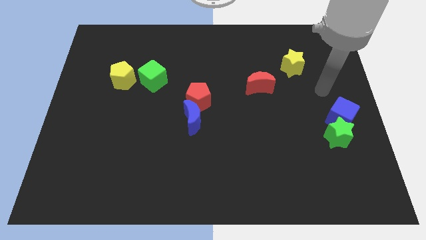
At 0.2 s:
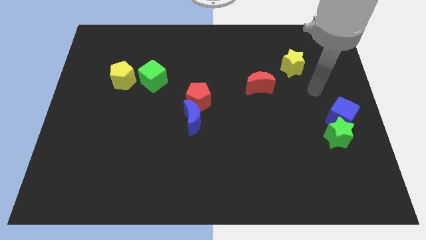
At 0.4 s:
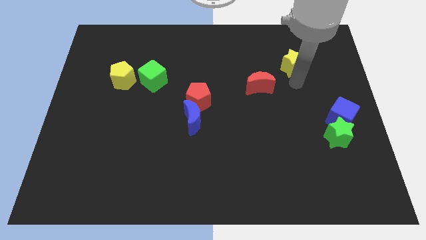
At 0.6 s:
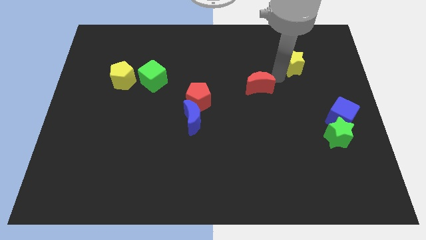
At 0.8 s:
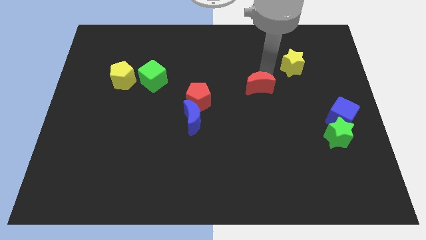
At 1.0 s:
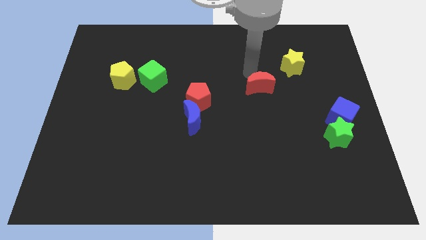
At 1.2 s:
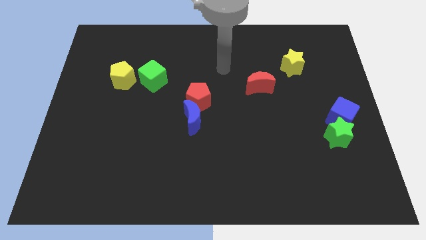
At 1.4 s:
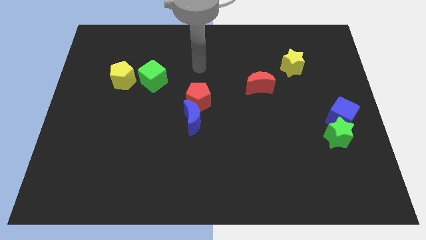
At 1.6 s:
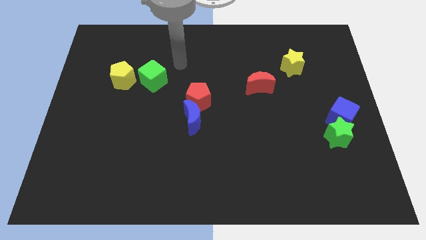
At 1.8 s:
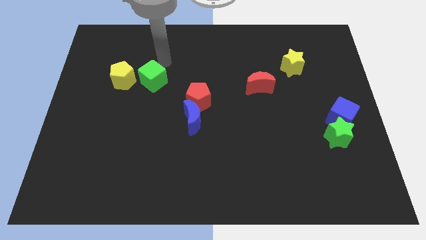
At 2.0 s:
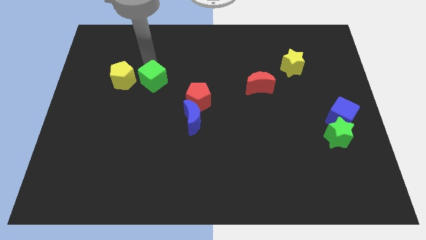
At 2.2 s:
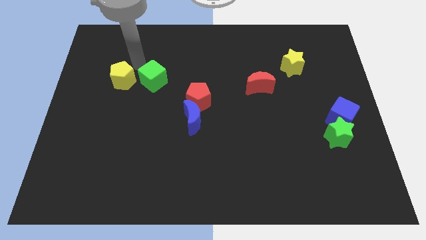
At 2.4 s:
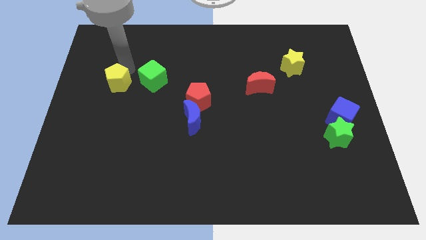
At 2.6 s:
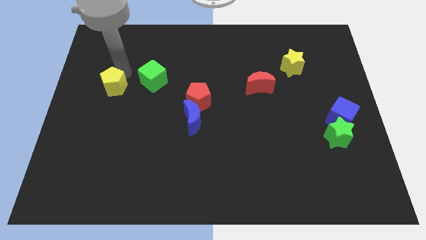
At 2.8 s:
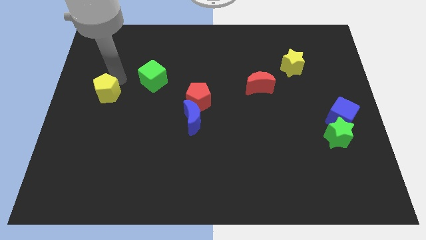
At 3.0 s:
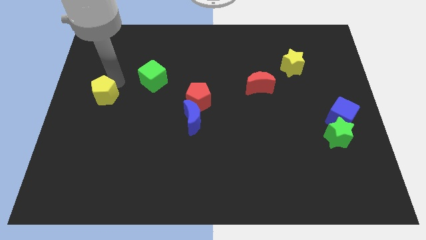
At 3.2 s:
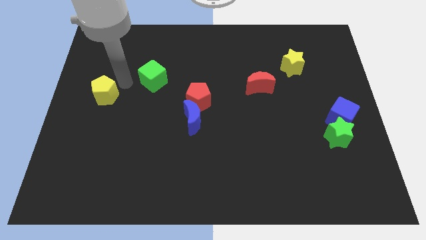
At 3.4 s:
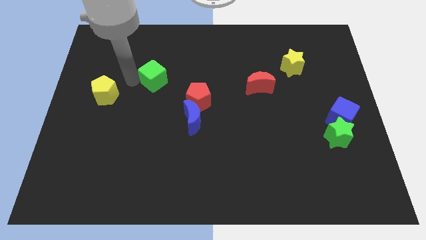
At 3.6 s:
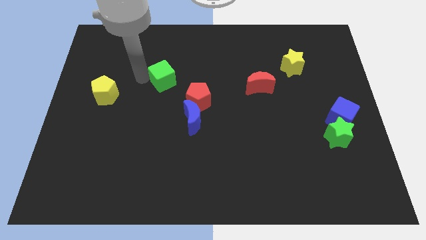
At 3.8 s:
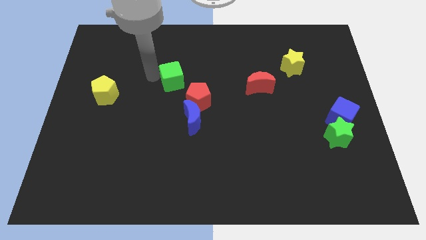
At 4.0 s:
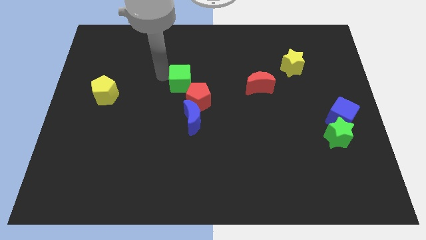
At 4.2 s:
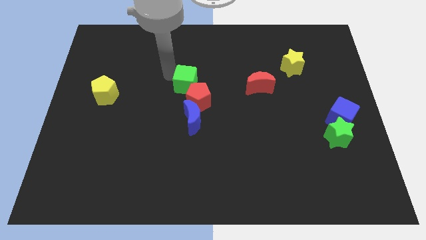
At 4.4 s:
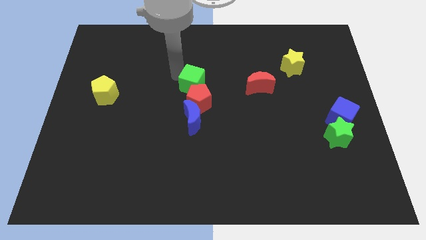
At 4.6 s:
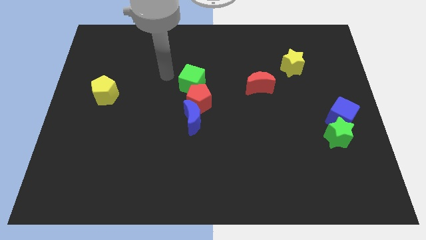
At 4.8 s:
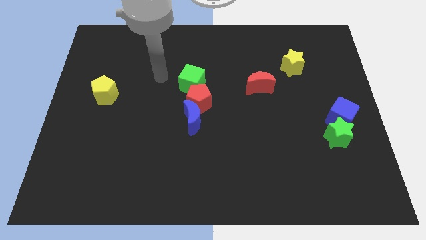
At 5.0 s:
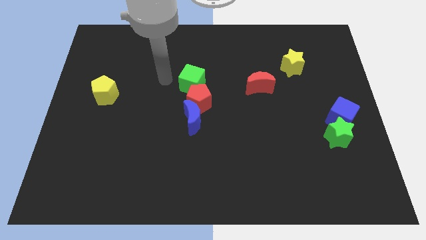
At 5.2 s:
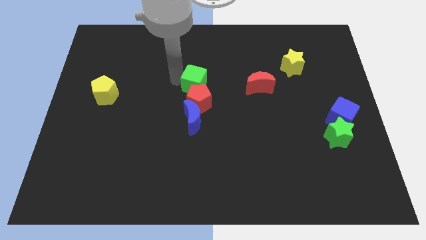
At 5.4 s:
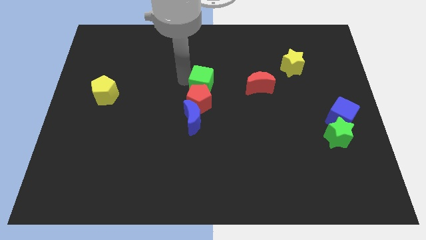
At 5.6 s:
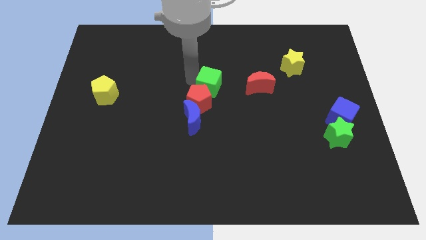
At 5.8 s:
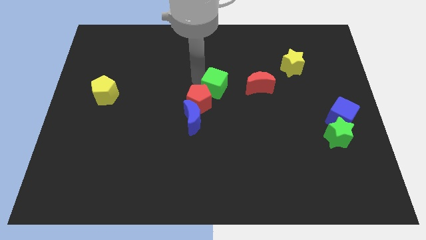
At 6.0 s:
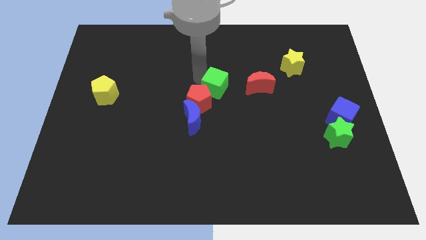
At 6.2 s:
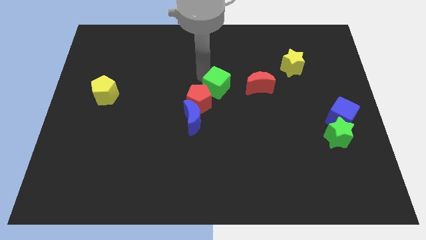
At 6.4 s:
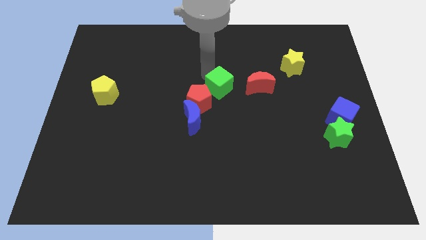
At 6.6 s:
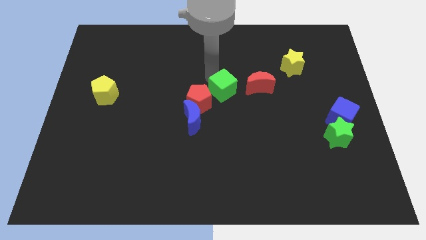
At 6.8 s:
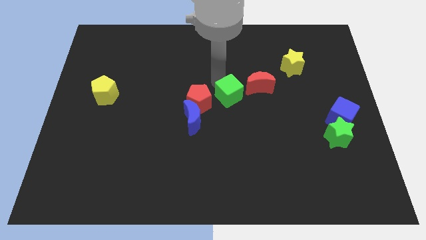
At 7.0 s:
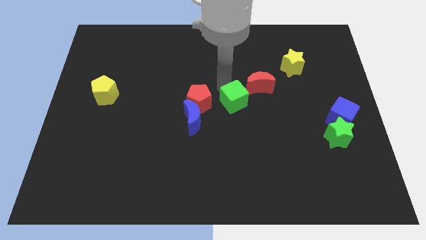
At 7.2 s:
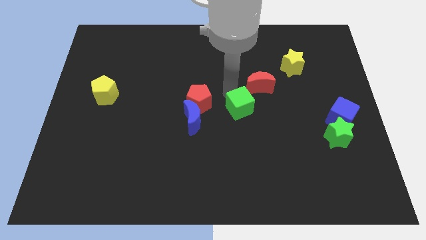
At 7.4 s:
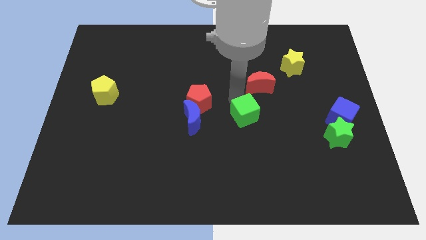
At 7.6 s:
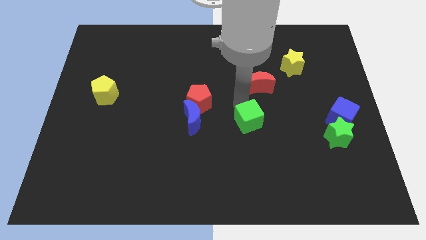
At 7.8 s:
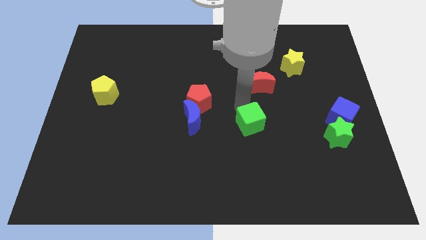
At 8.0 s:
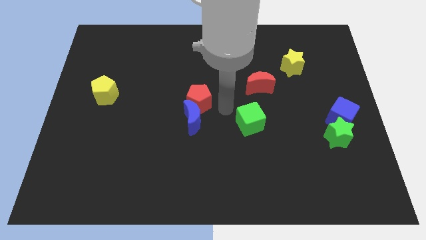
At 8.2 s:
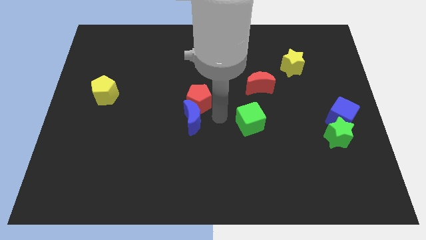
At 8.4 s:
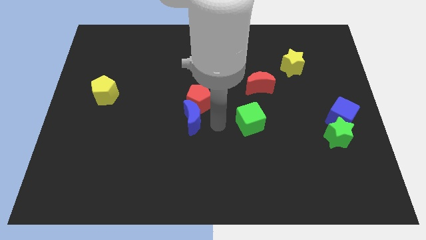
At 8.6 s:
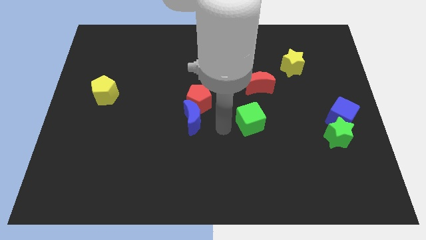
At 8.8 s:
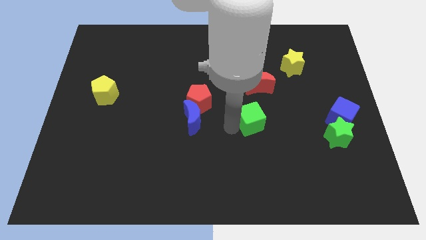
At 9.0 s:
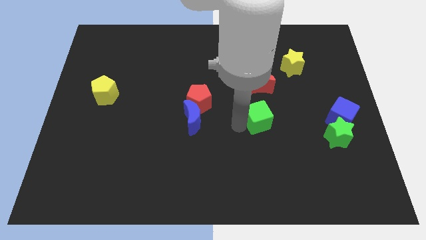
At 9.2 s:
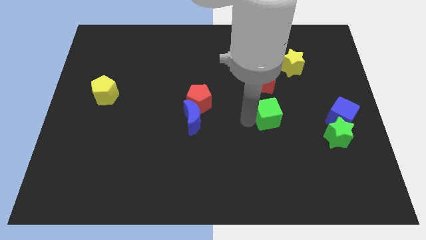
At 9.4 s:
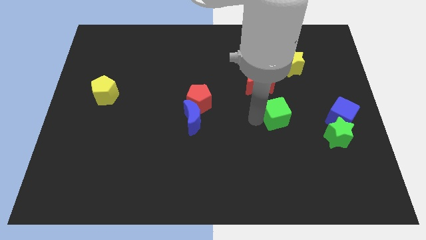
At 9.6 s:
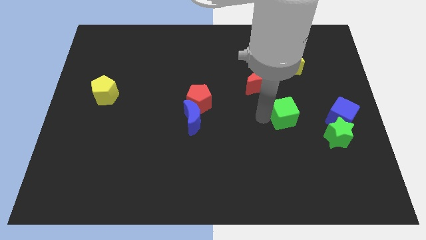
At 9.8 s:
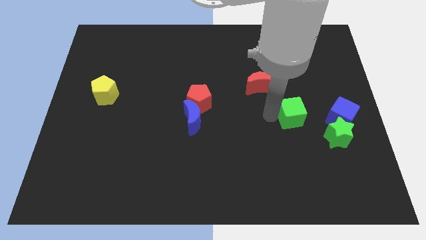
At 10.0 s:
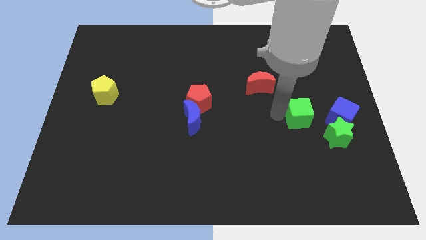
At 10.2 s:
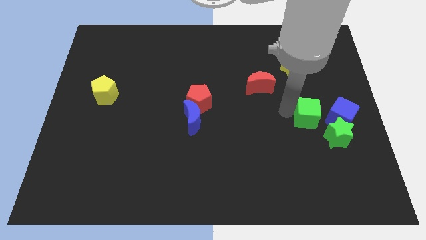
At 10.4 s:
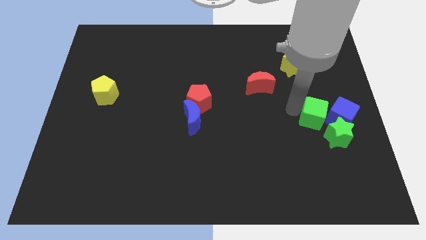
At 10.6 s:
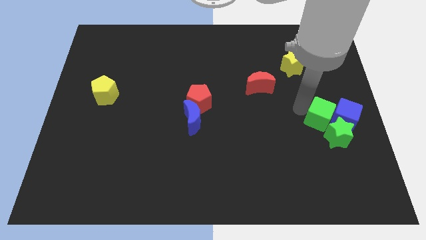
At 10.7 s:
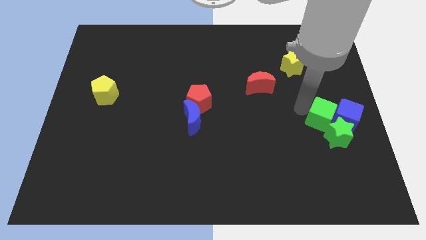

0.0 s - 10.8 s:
move the green cube towards the blue cube

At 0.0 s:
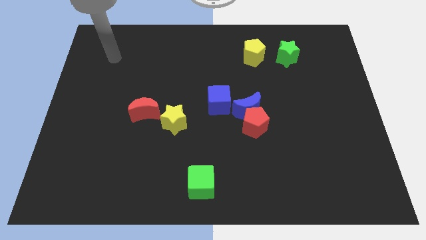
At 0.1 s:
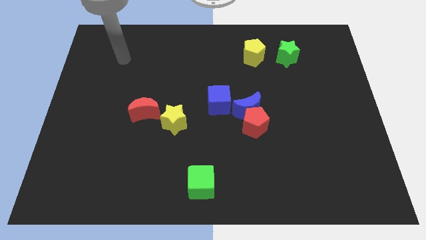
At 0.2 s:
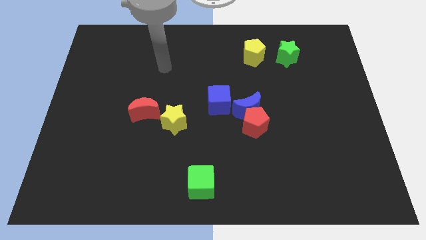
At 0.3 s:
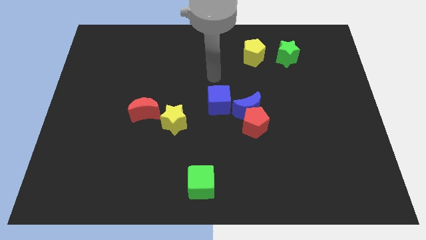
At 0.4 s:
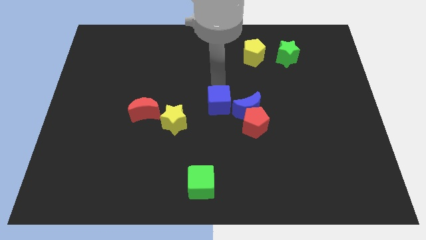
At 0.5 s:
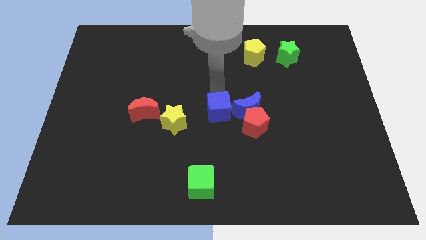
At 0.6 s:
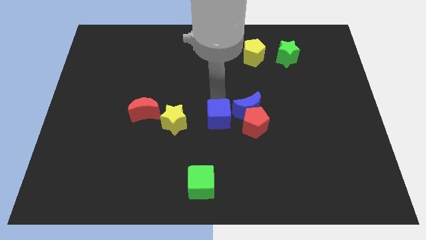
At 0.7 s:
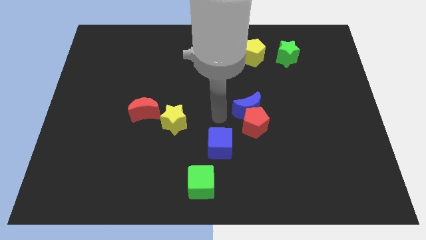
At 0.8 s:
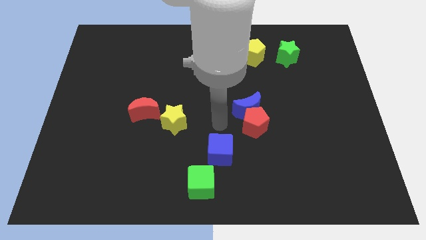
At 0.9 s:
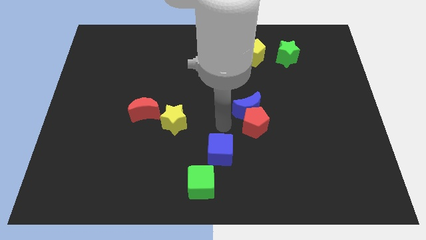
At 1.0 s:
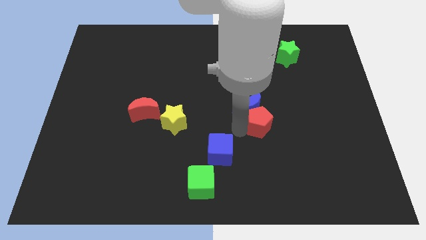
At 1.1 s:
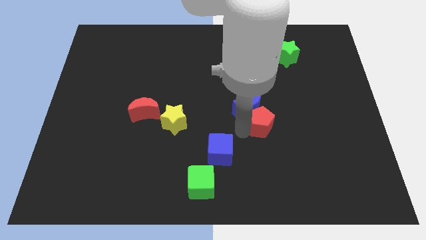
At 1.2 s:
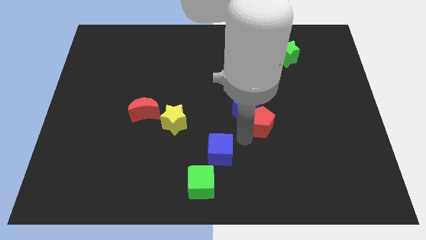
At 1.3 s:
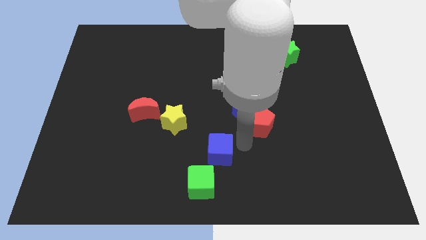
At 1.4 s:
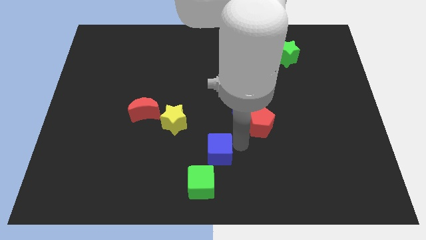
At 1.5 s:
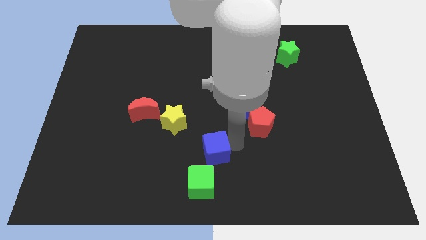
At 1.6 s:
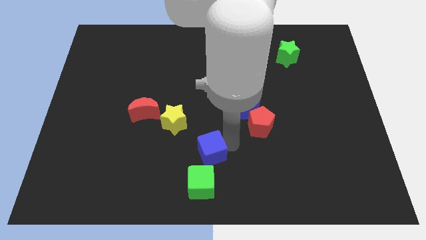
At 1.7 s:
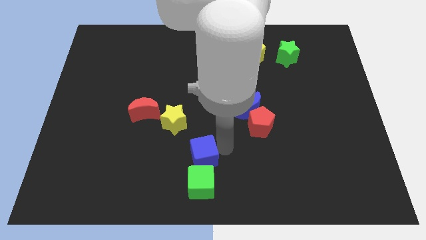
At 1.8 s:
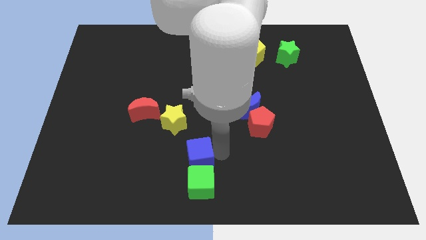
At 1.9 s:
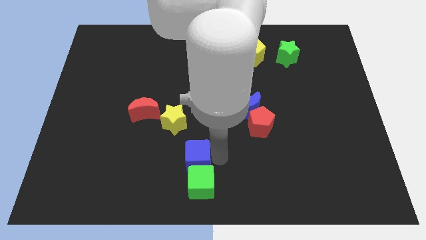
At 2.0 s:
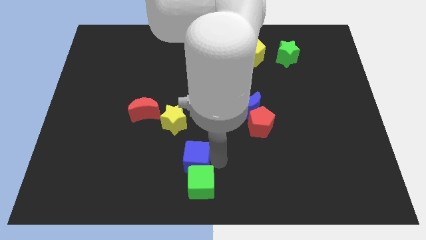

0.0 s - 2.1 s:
slide the blue cube close to the green cube

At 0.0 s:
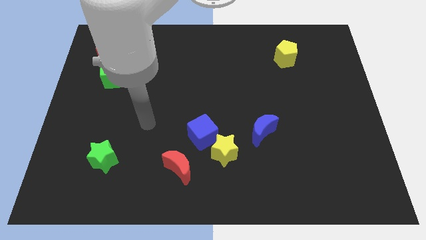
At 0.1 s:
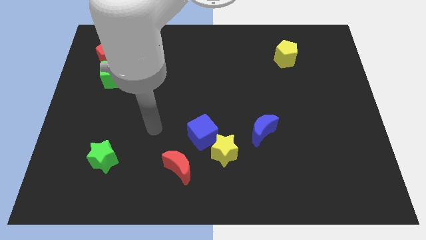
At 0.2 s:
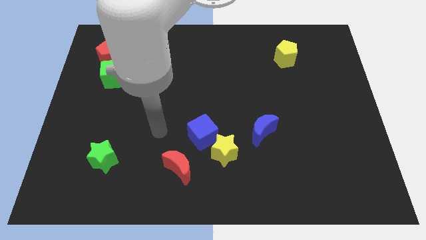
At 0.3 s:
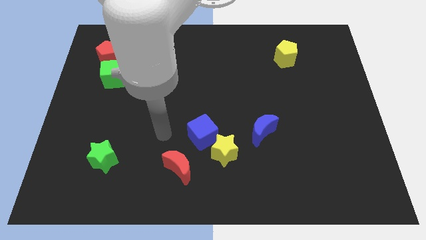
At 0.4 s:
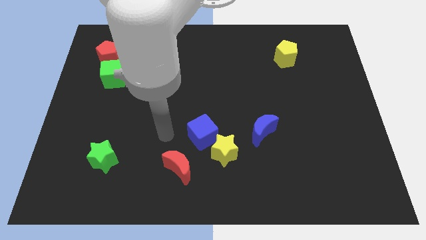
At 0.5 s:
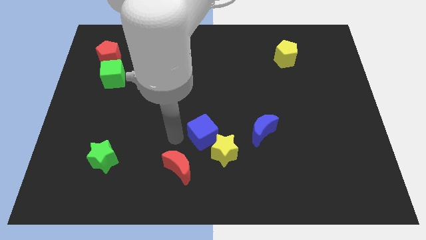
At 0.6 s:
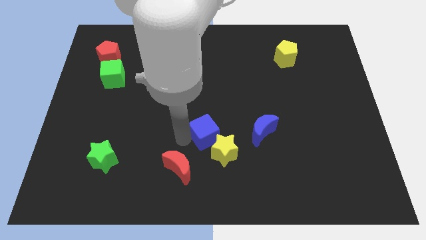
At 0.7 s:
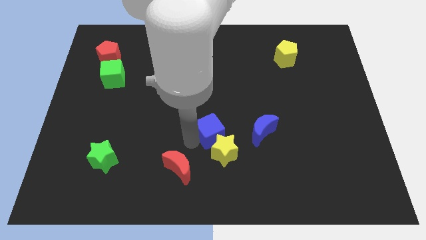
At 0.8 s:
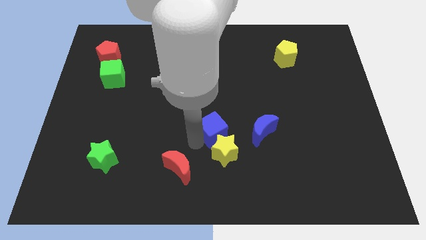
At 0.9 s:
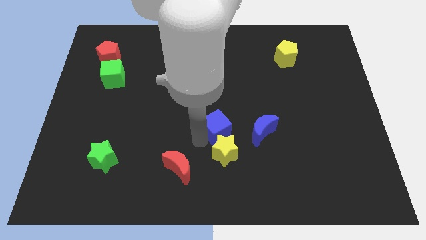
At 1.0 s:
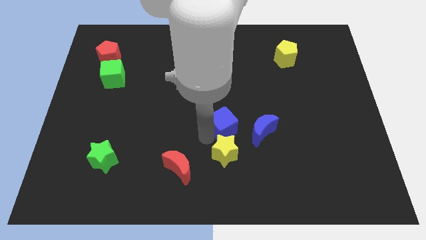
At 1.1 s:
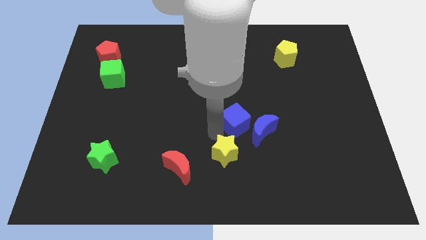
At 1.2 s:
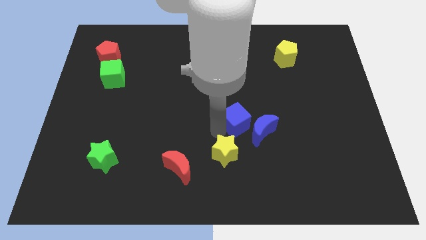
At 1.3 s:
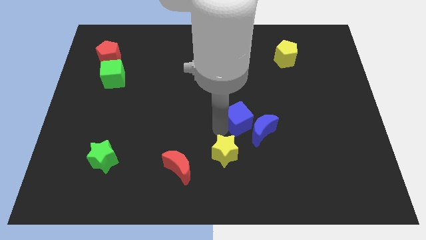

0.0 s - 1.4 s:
slide the blue cube towards the blue moon
